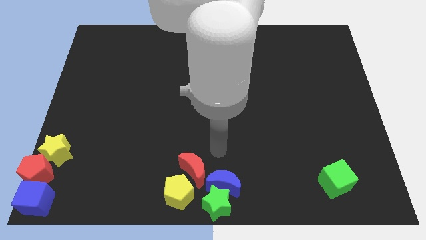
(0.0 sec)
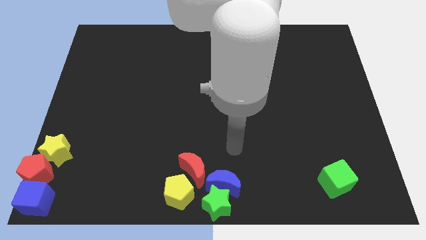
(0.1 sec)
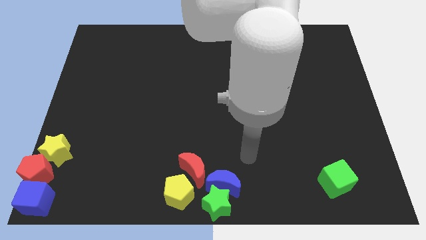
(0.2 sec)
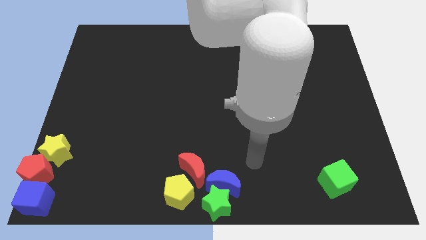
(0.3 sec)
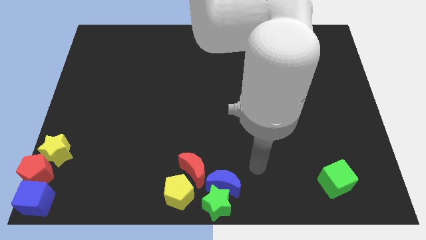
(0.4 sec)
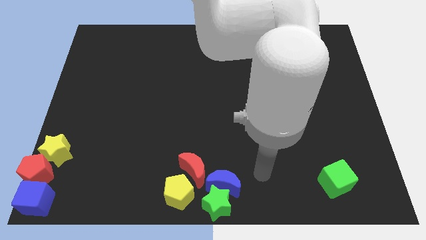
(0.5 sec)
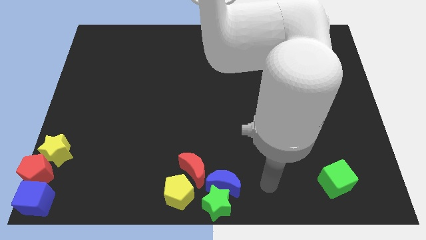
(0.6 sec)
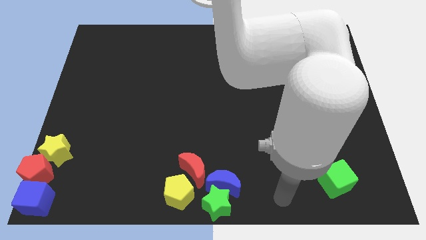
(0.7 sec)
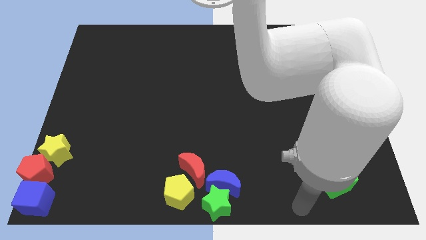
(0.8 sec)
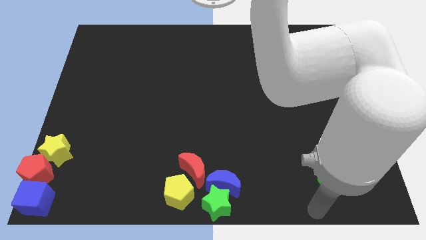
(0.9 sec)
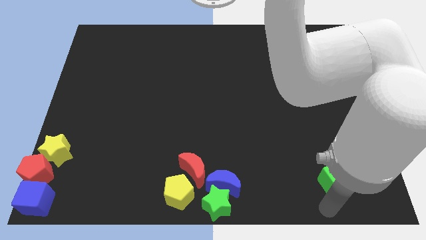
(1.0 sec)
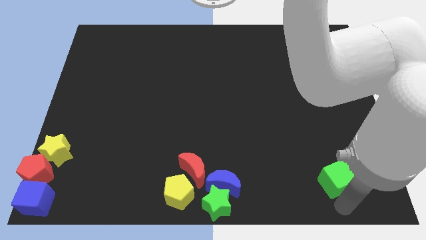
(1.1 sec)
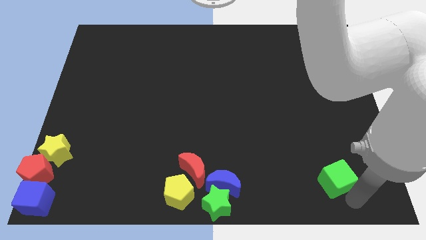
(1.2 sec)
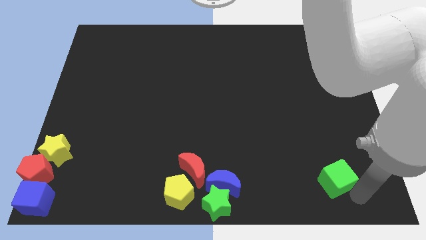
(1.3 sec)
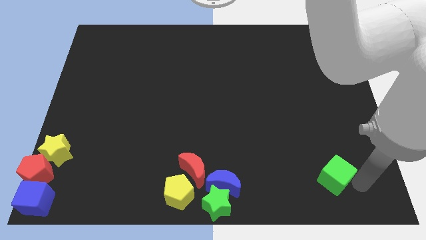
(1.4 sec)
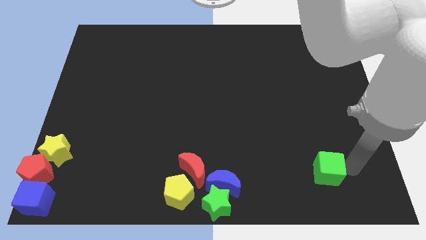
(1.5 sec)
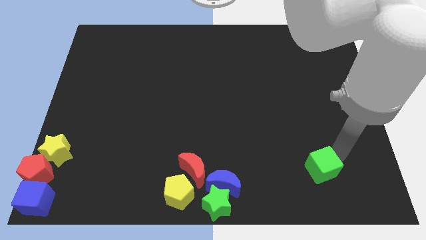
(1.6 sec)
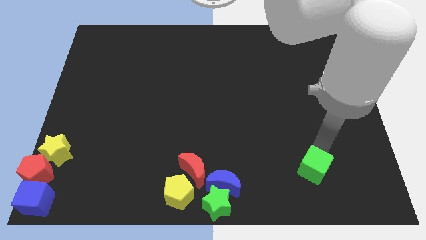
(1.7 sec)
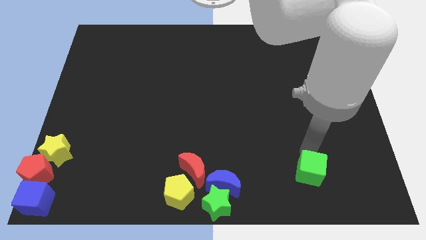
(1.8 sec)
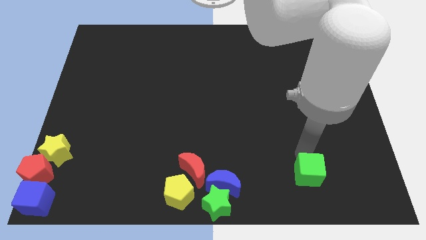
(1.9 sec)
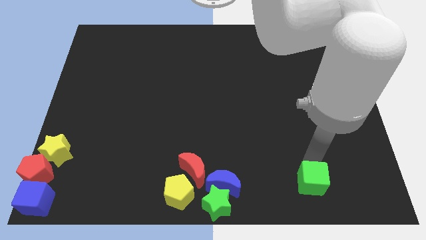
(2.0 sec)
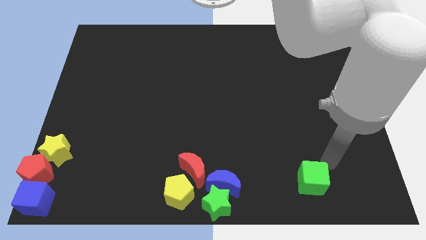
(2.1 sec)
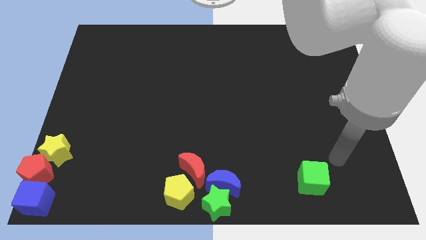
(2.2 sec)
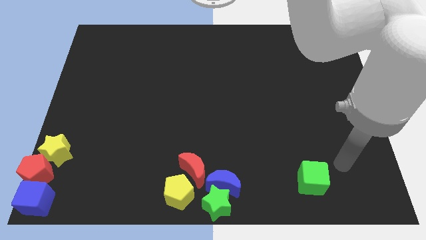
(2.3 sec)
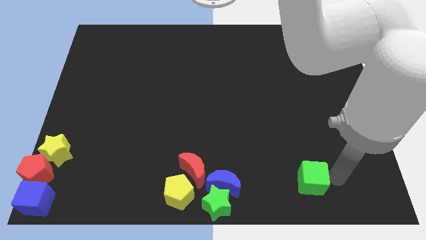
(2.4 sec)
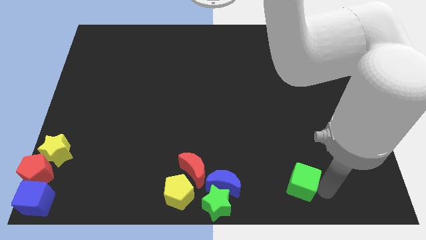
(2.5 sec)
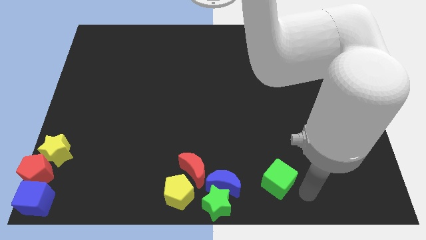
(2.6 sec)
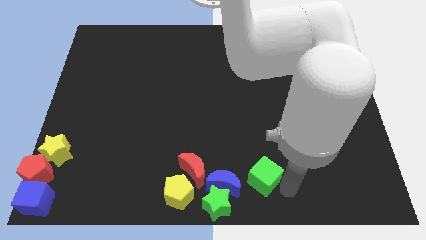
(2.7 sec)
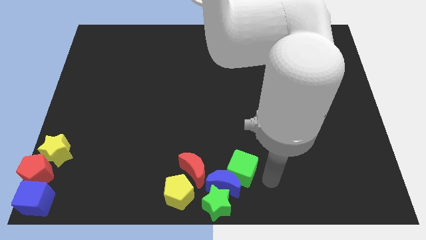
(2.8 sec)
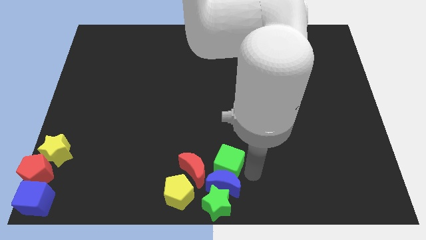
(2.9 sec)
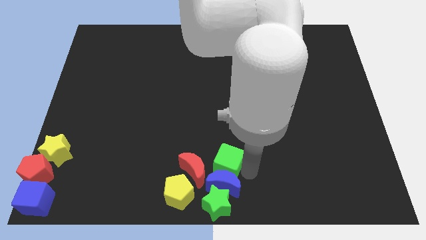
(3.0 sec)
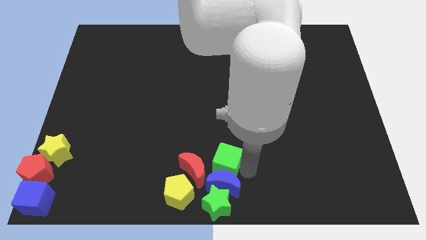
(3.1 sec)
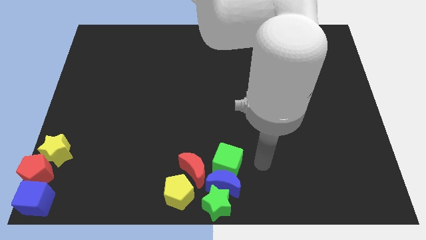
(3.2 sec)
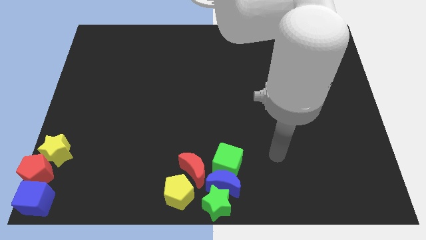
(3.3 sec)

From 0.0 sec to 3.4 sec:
push the green cube into the blue moon

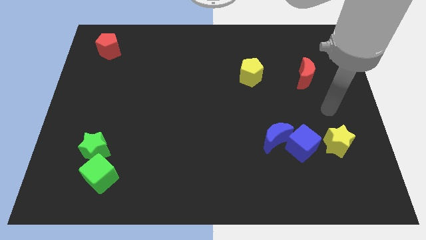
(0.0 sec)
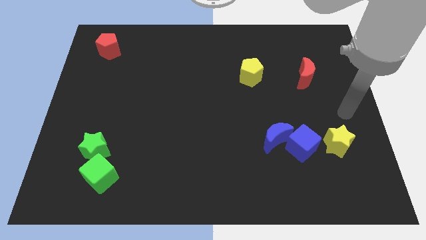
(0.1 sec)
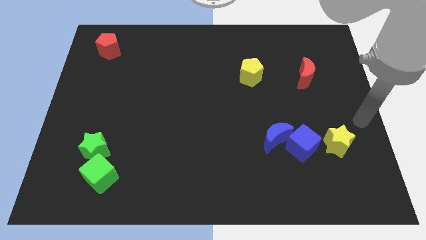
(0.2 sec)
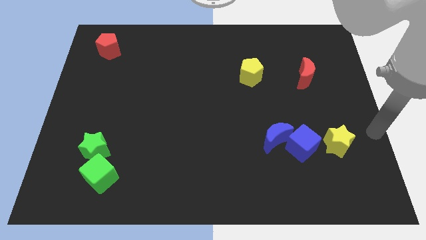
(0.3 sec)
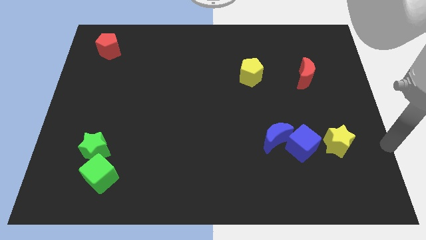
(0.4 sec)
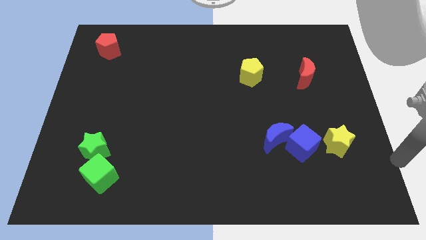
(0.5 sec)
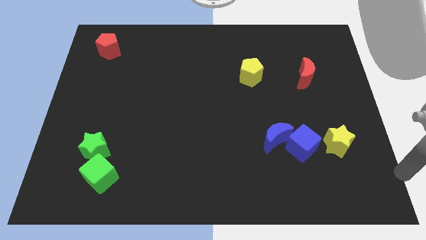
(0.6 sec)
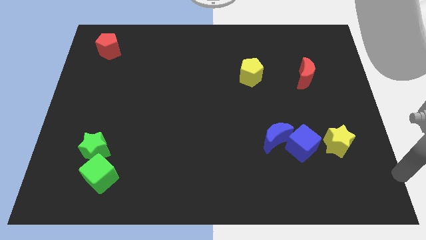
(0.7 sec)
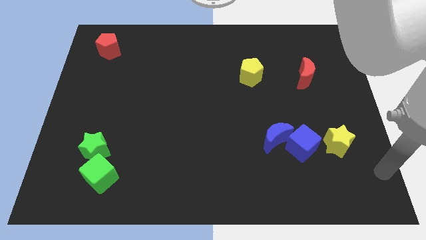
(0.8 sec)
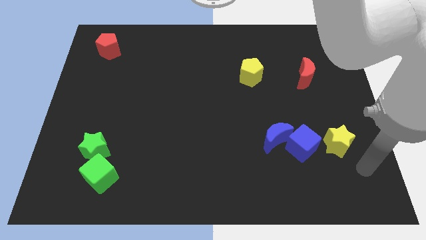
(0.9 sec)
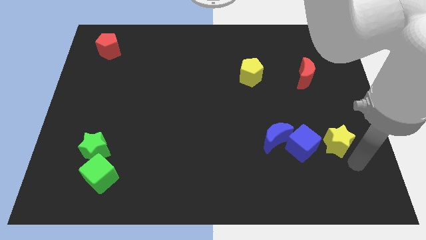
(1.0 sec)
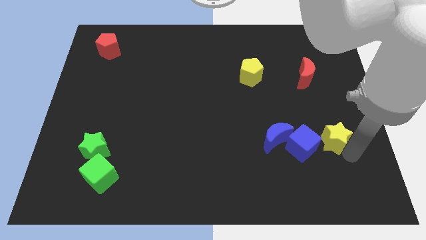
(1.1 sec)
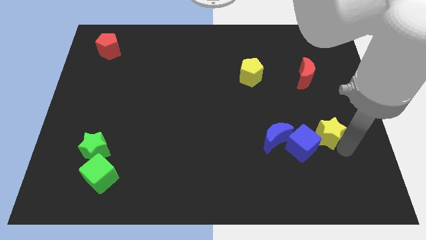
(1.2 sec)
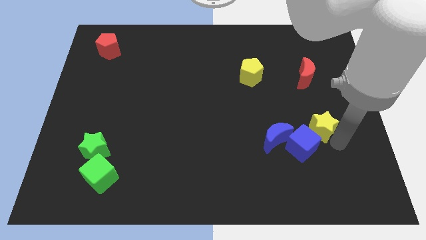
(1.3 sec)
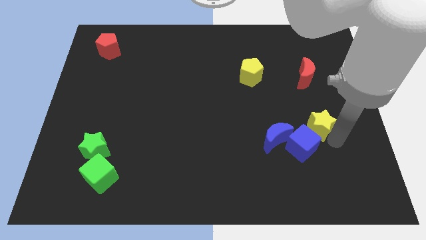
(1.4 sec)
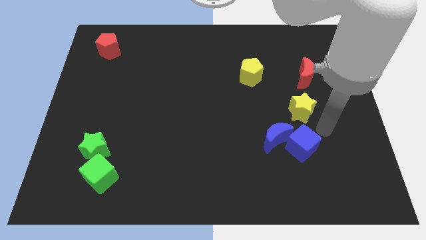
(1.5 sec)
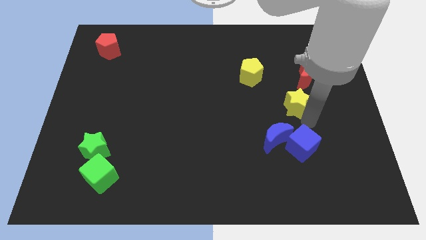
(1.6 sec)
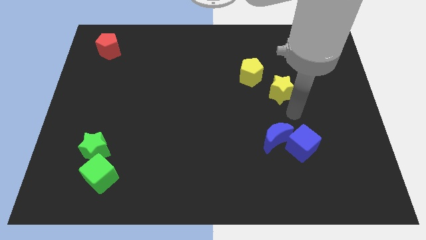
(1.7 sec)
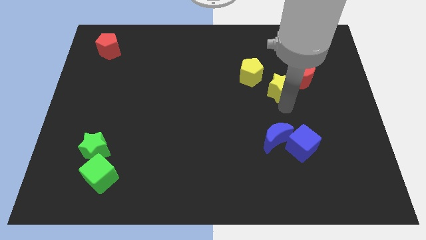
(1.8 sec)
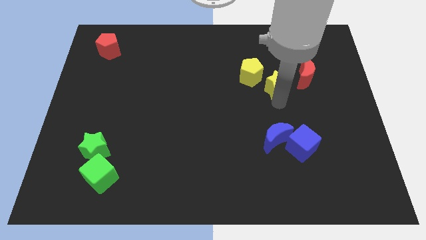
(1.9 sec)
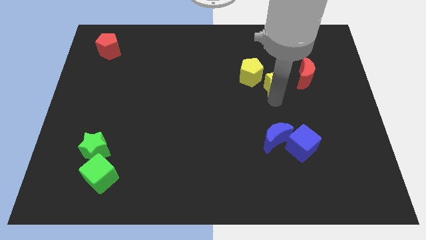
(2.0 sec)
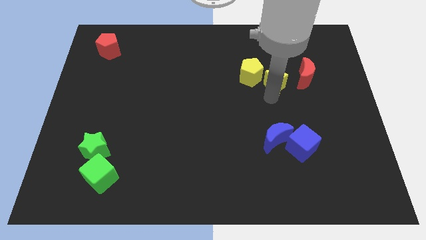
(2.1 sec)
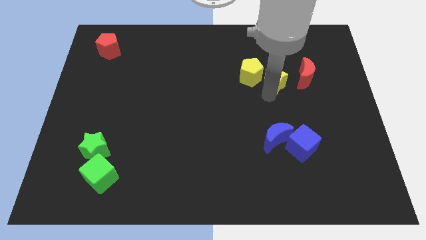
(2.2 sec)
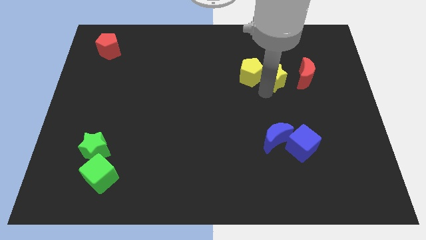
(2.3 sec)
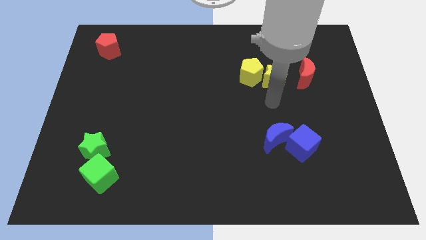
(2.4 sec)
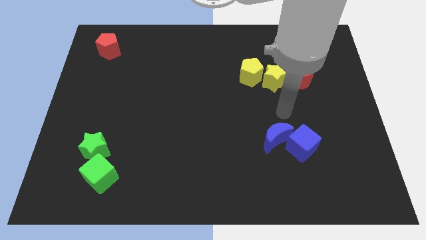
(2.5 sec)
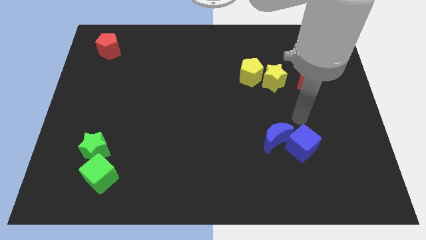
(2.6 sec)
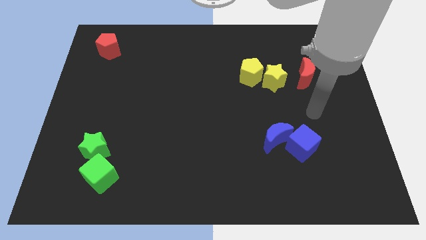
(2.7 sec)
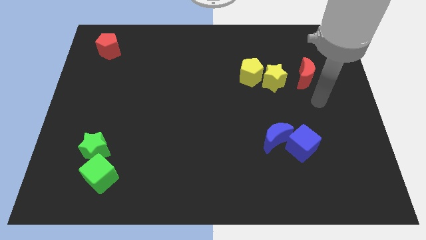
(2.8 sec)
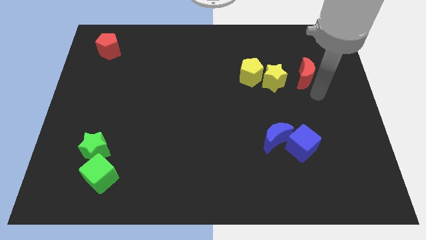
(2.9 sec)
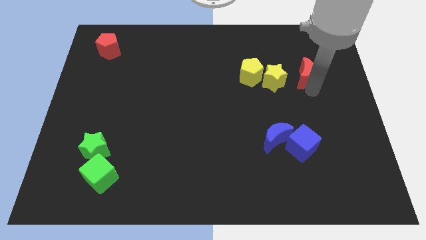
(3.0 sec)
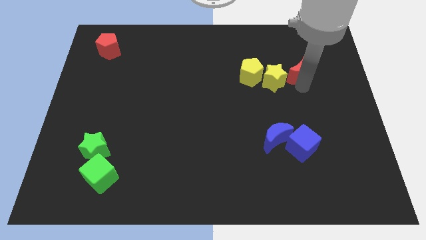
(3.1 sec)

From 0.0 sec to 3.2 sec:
place the yellow star vertically above the blue crescent

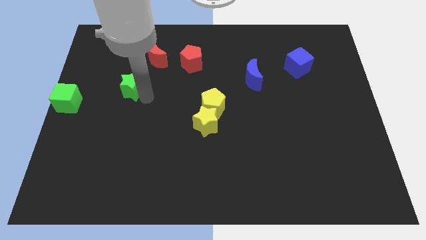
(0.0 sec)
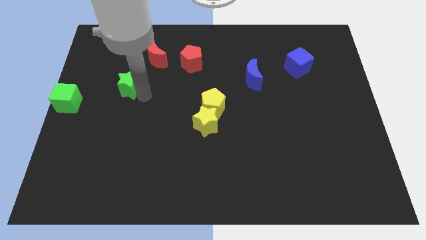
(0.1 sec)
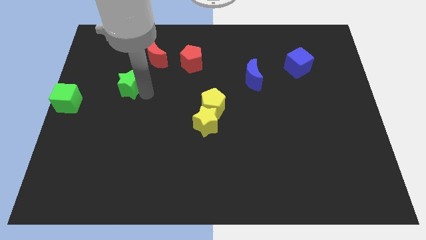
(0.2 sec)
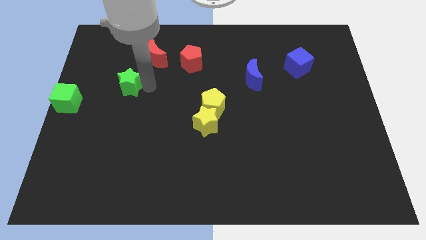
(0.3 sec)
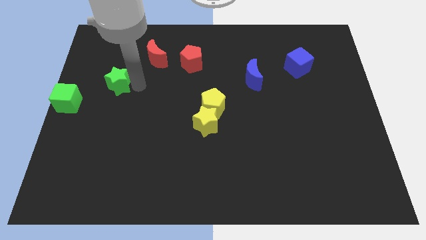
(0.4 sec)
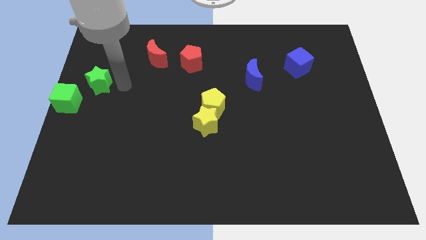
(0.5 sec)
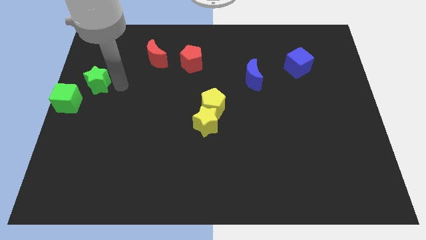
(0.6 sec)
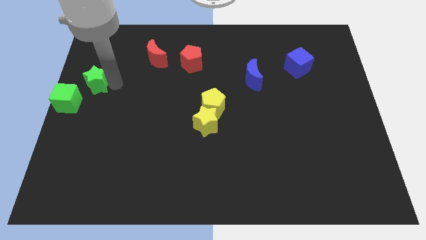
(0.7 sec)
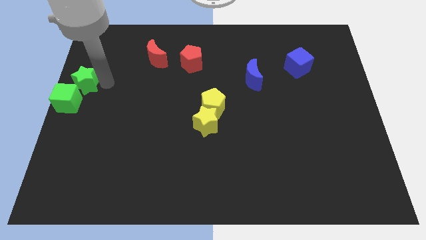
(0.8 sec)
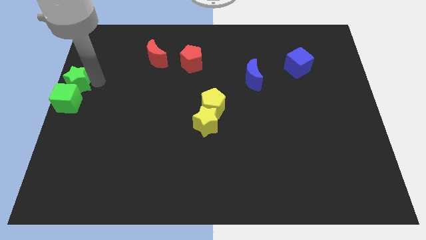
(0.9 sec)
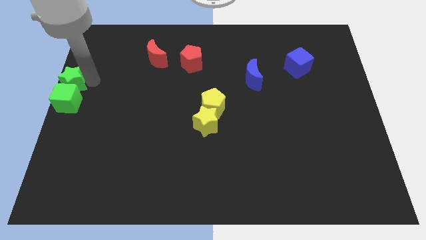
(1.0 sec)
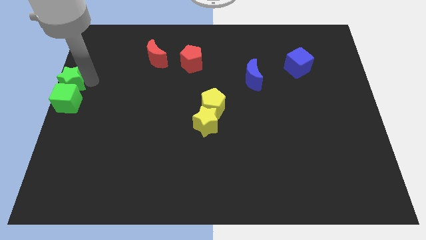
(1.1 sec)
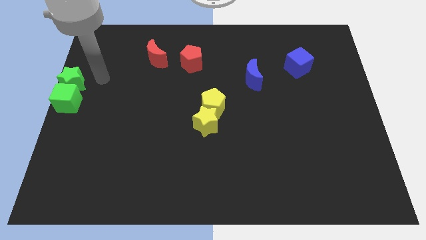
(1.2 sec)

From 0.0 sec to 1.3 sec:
put green star above the green cube

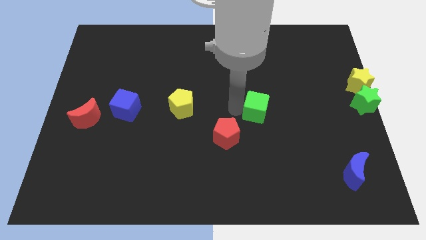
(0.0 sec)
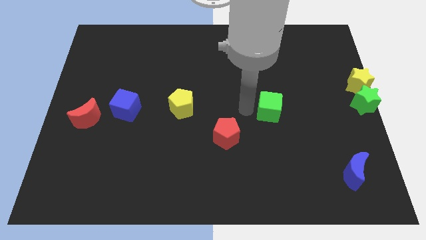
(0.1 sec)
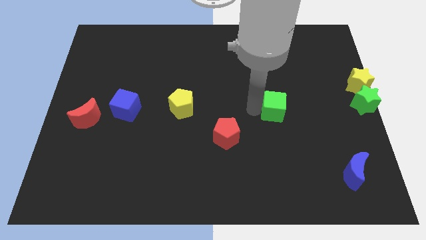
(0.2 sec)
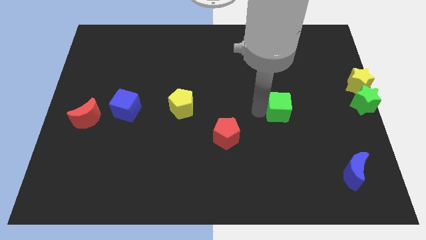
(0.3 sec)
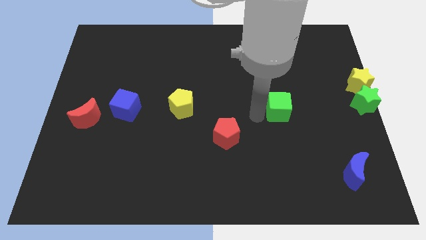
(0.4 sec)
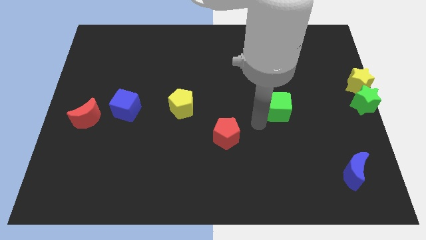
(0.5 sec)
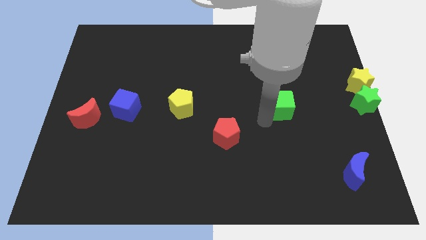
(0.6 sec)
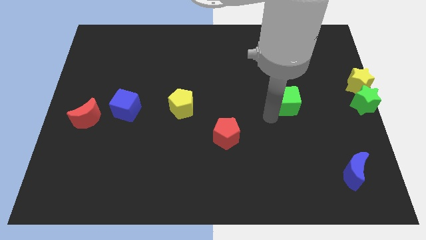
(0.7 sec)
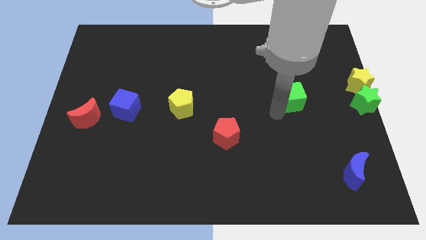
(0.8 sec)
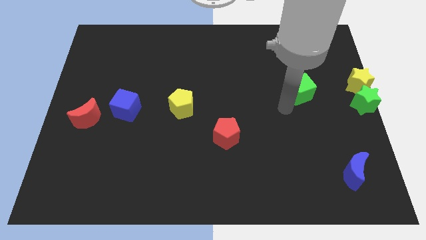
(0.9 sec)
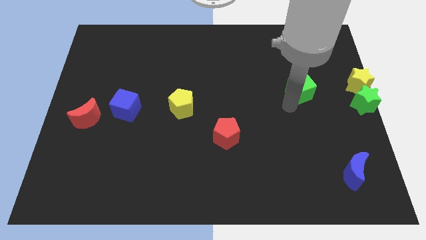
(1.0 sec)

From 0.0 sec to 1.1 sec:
move the green cube to the right of the board
